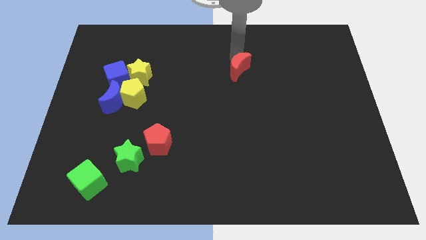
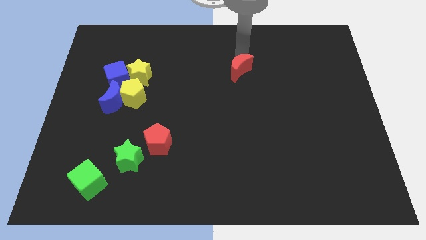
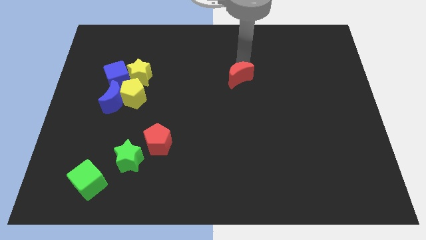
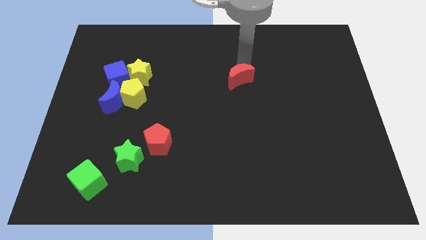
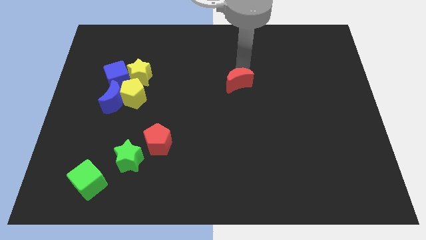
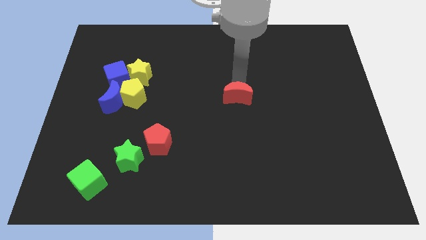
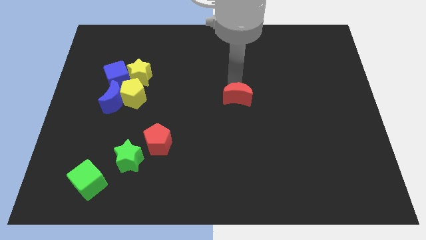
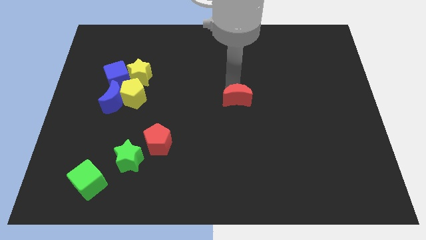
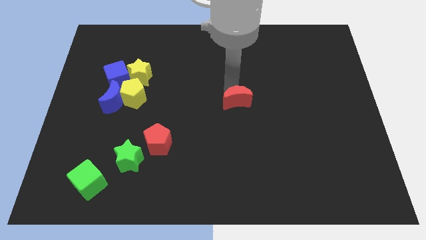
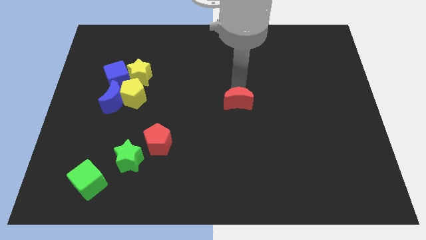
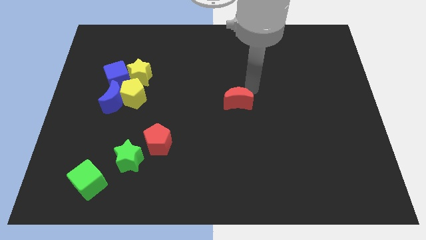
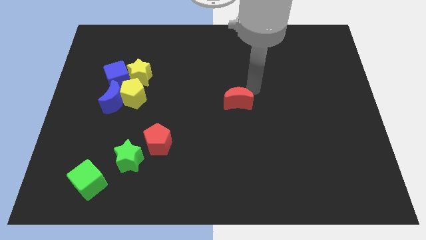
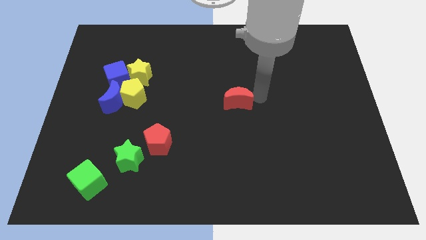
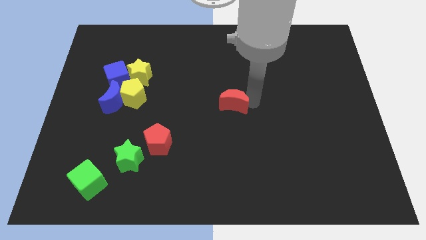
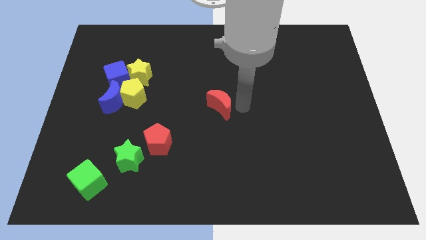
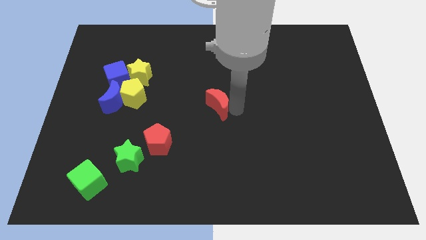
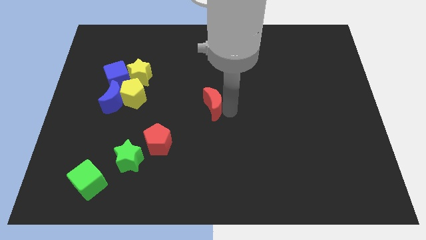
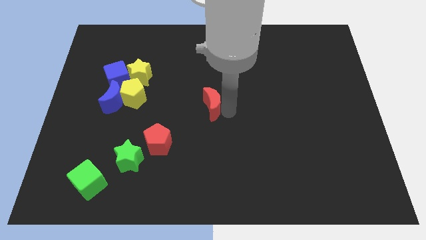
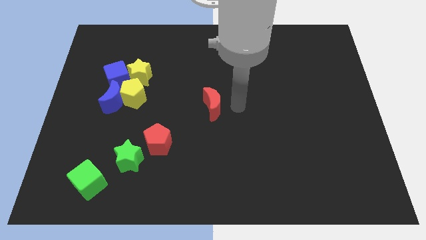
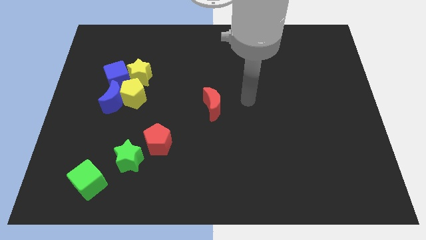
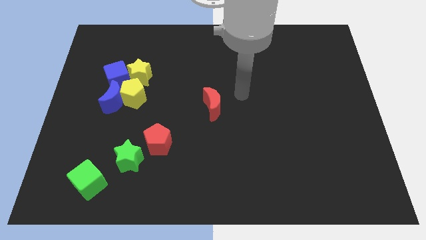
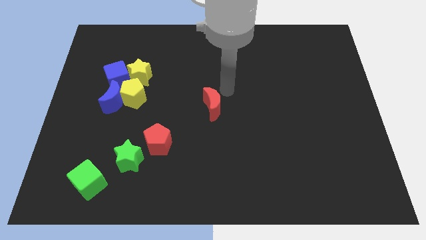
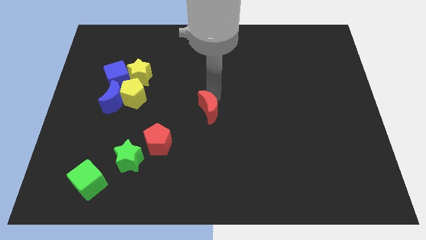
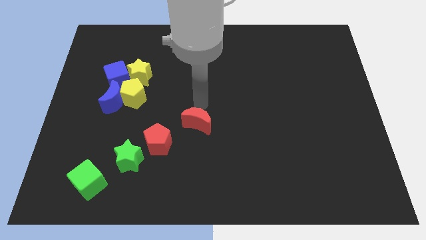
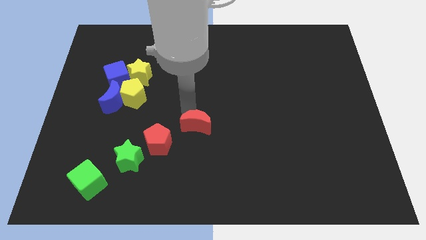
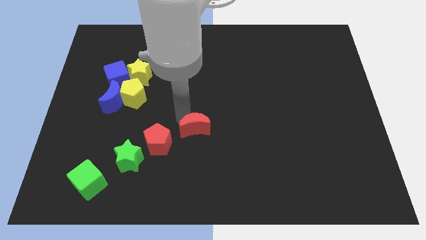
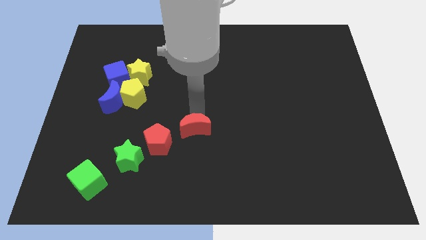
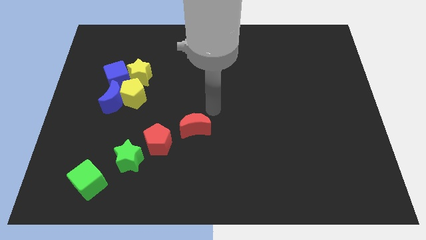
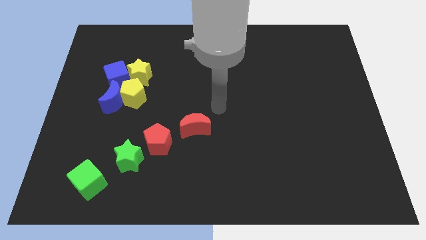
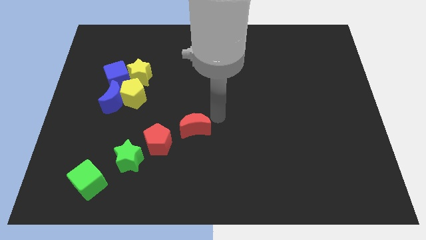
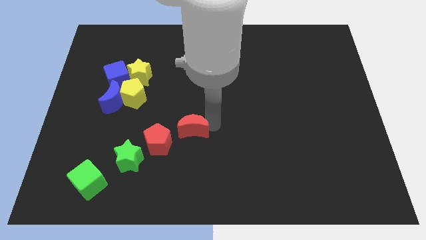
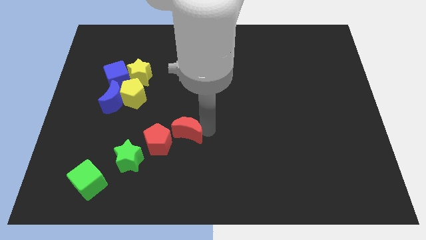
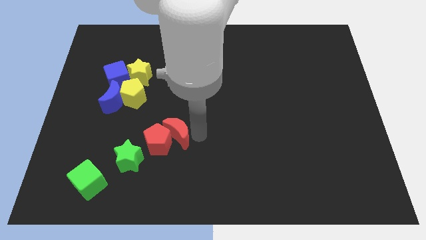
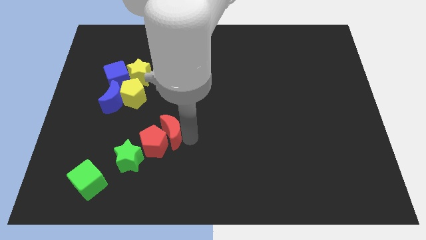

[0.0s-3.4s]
move the red crescent to the right of the red pentagon

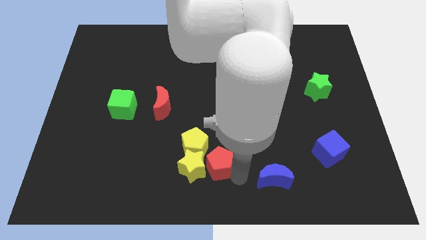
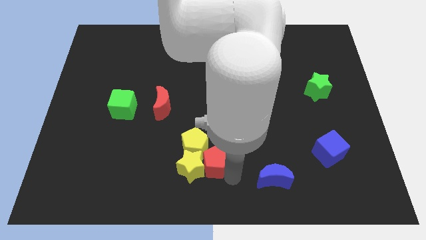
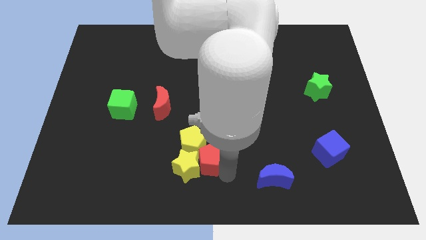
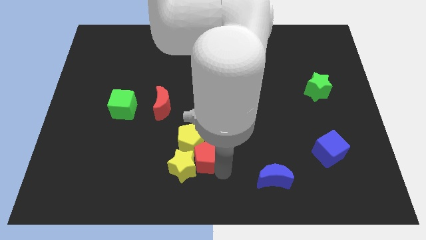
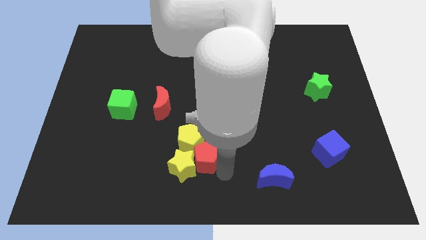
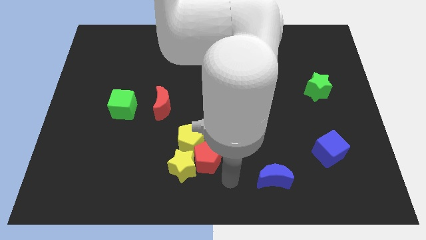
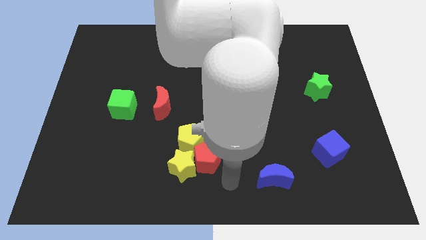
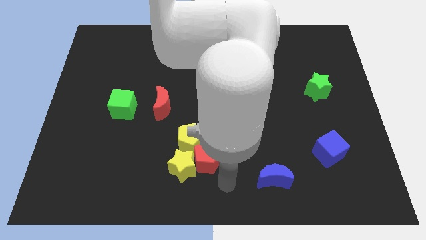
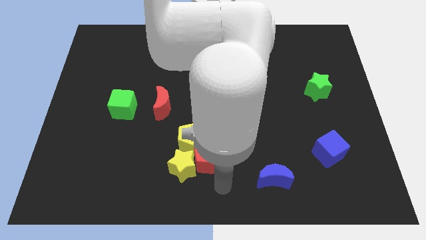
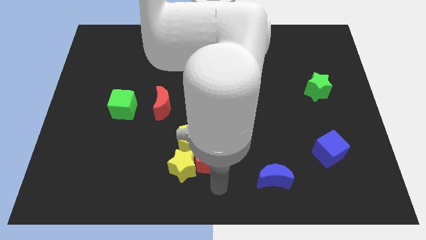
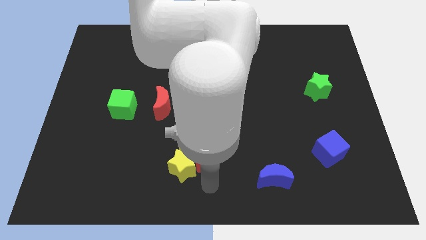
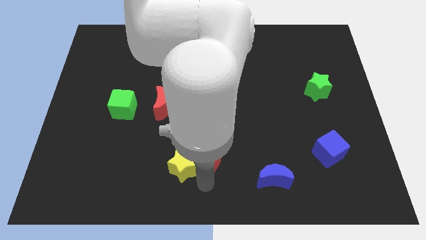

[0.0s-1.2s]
push the red pentagon into the yellow star

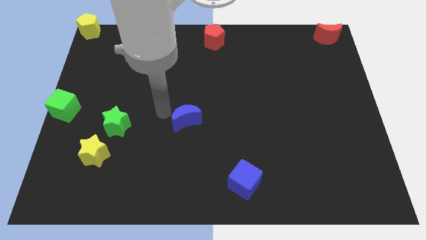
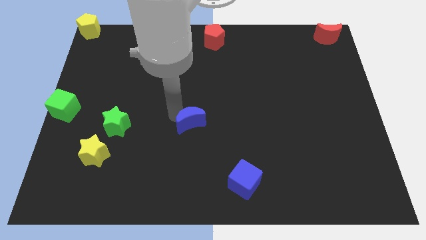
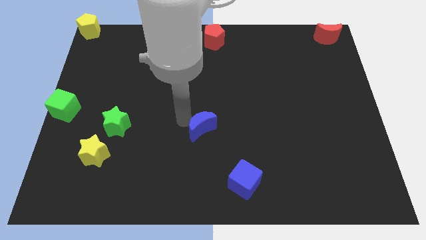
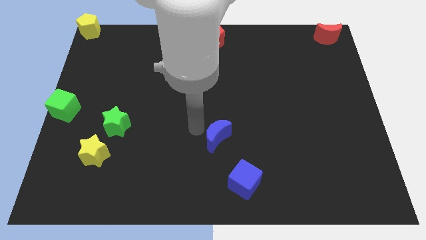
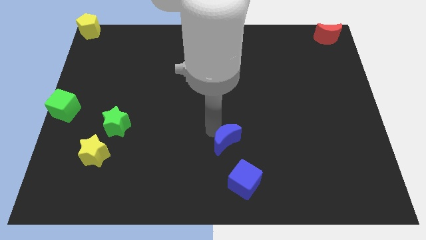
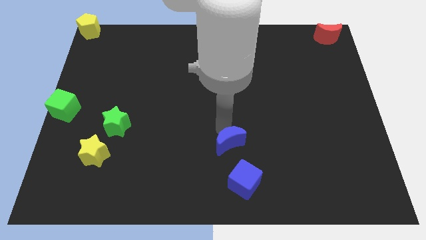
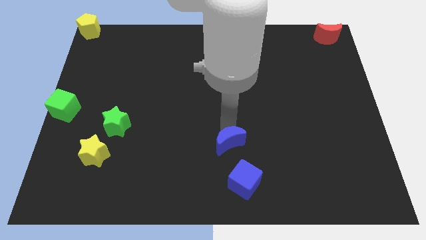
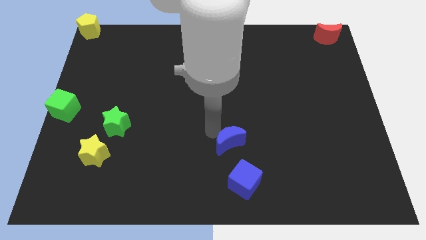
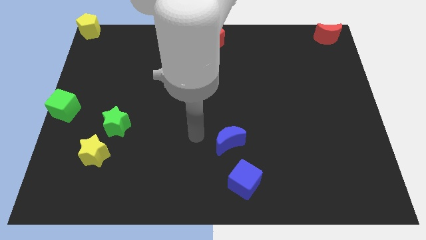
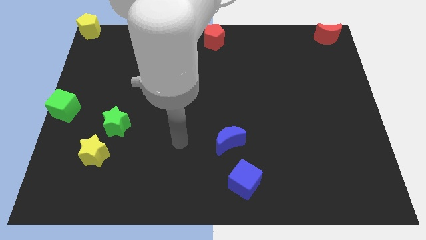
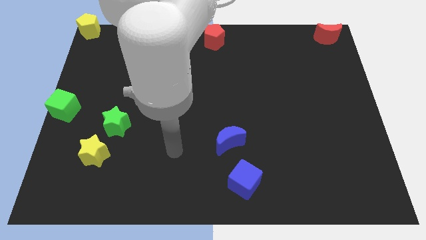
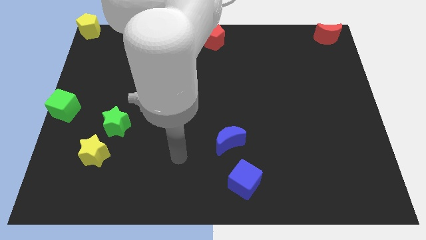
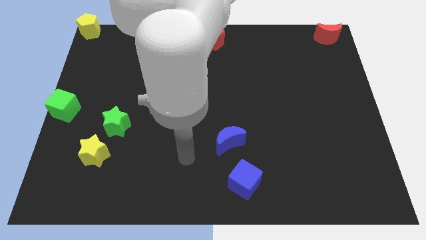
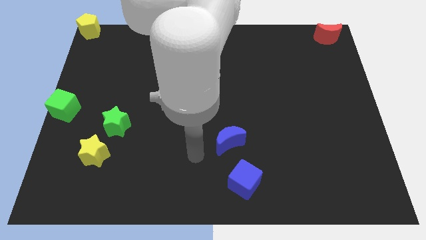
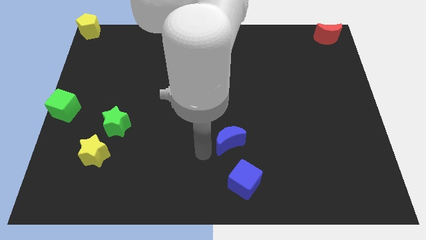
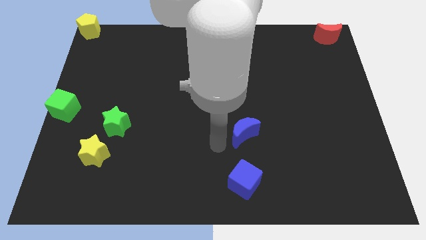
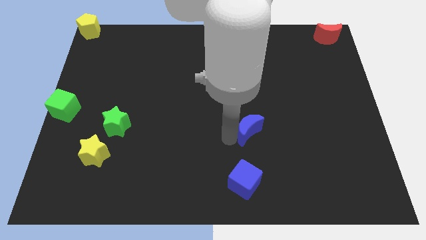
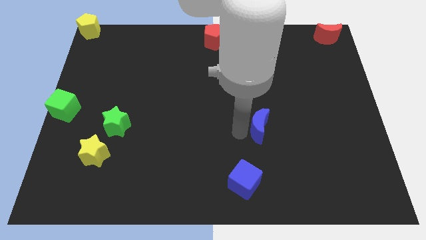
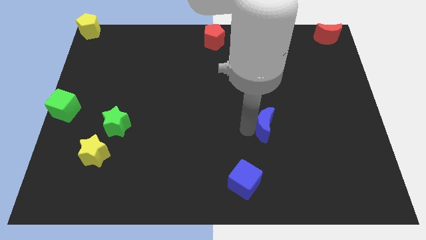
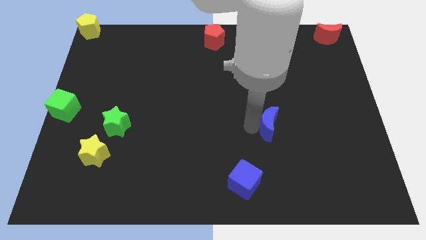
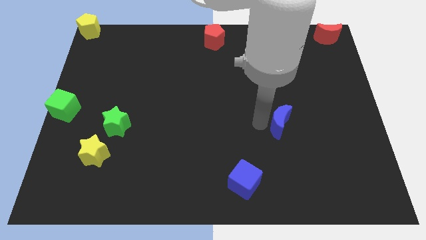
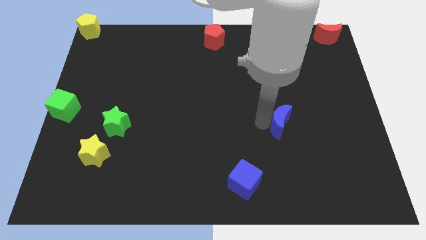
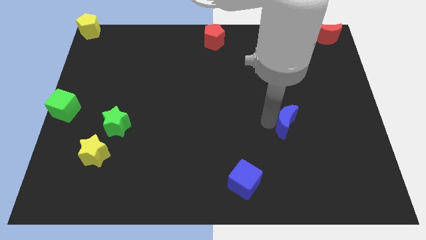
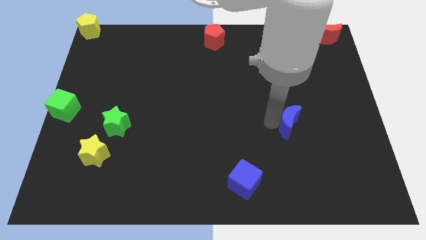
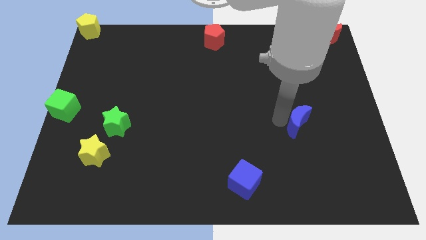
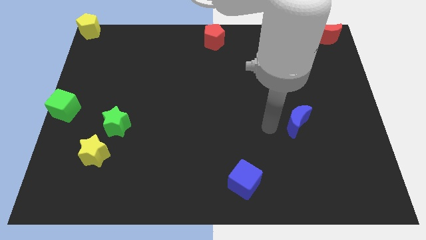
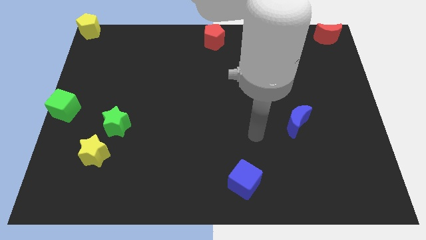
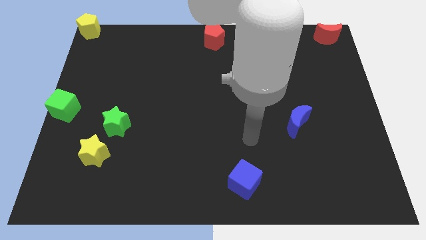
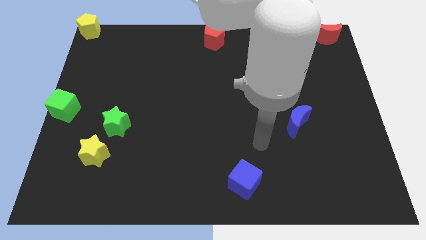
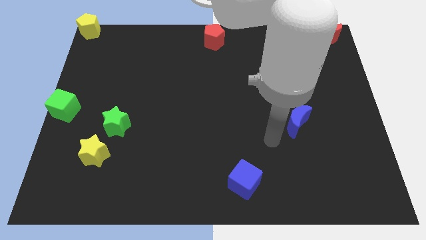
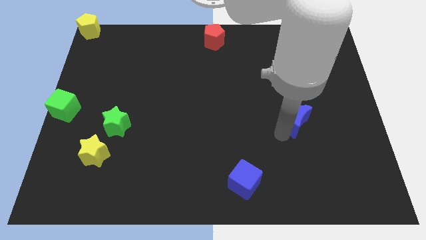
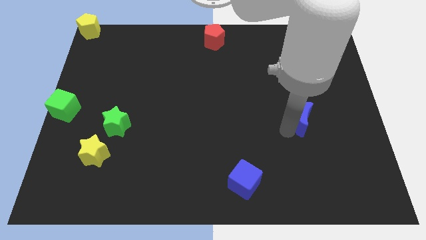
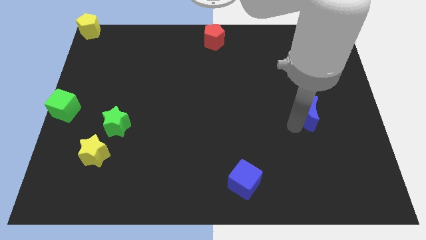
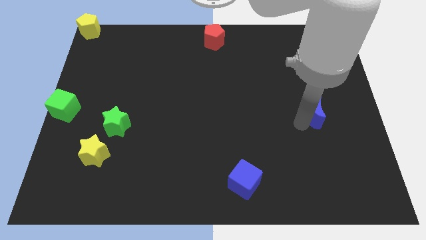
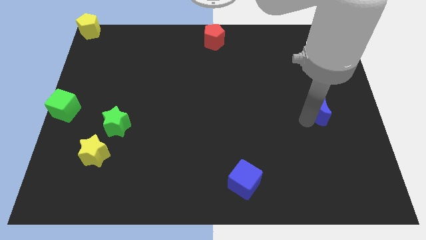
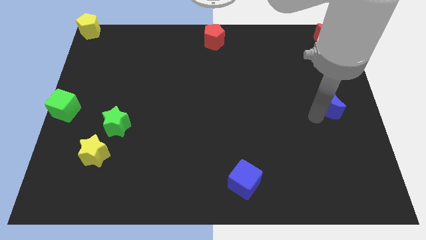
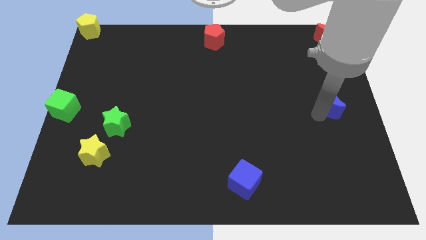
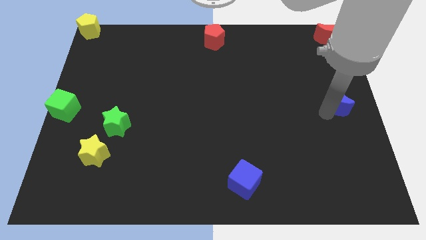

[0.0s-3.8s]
put the blue moon to the center right of the board

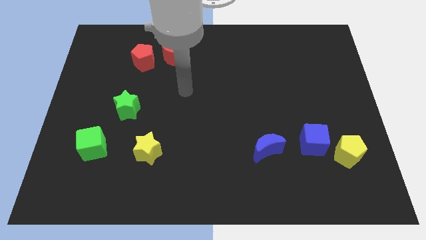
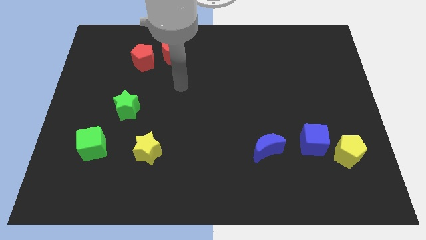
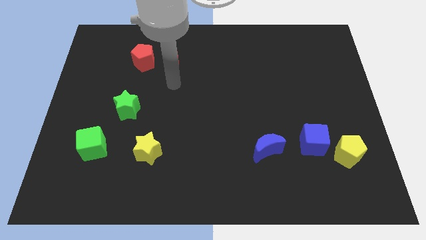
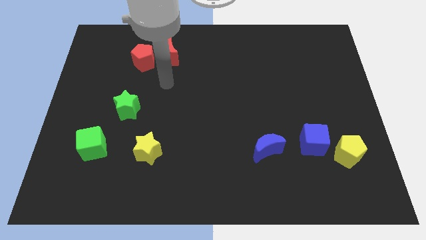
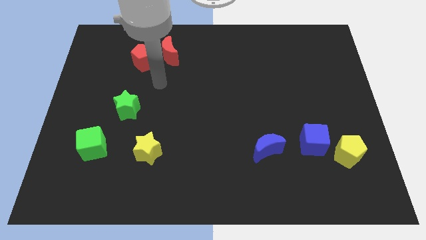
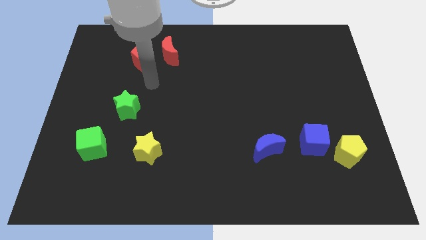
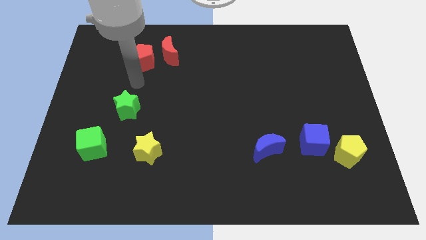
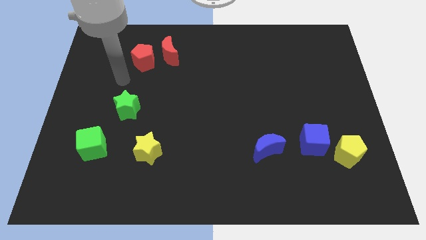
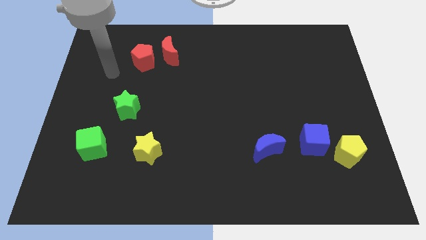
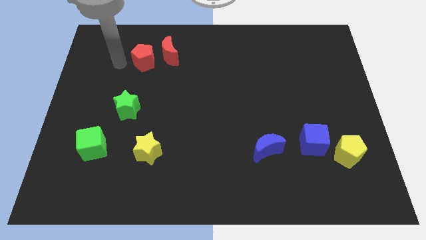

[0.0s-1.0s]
place arm diagonally above green star
